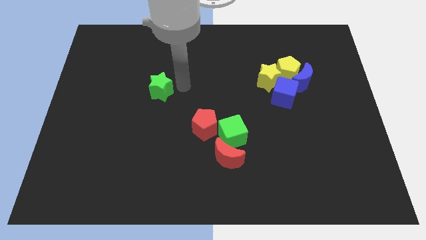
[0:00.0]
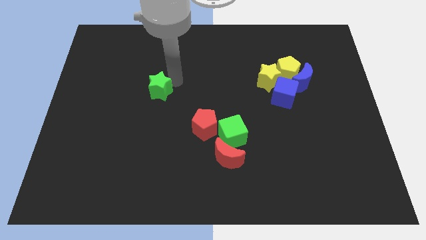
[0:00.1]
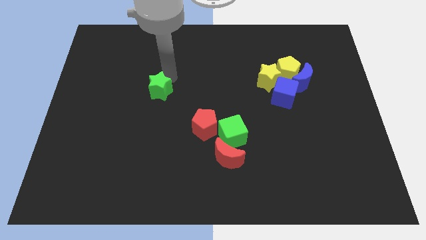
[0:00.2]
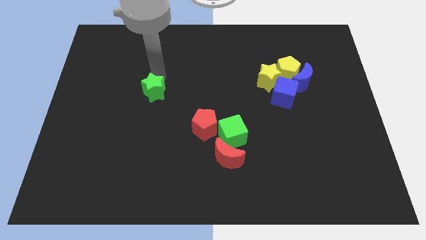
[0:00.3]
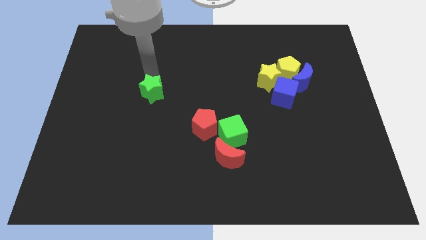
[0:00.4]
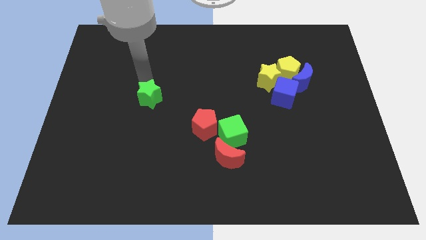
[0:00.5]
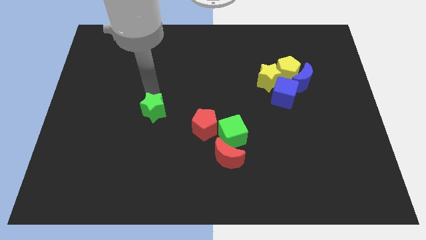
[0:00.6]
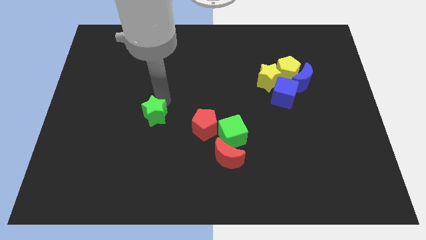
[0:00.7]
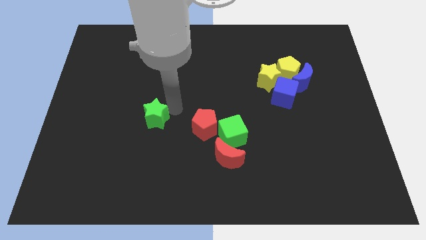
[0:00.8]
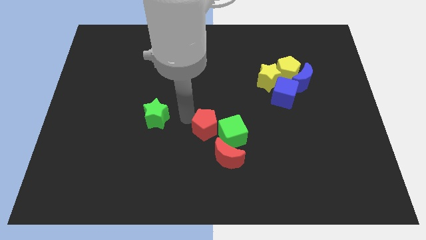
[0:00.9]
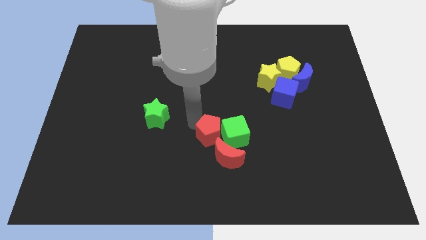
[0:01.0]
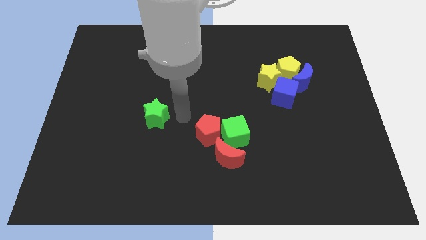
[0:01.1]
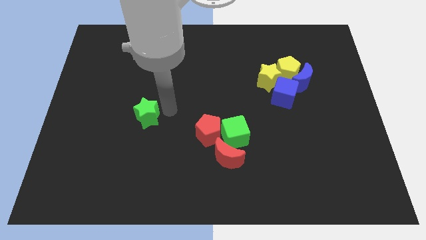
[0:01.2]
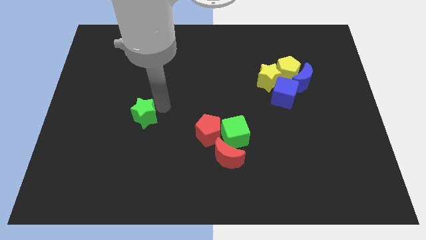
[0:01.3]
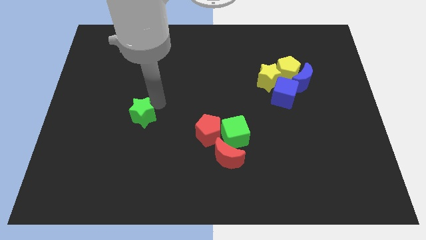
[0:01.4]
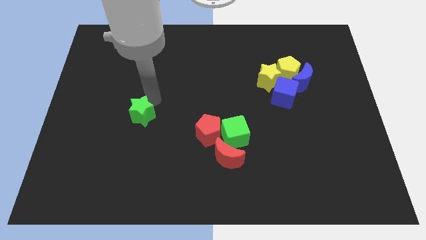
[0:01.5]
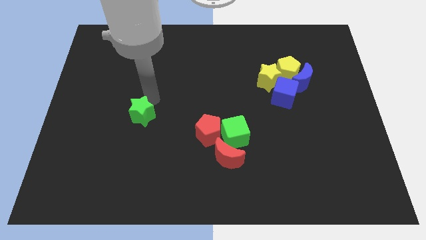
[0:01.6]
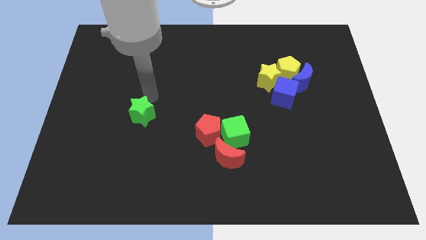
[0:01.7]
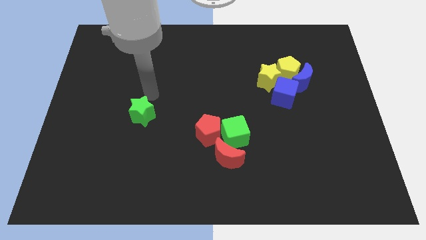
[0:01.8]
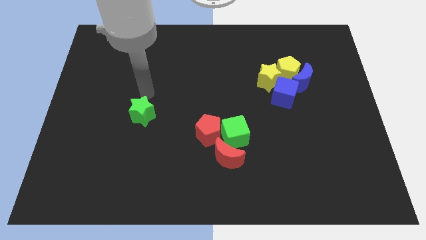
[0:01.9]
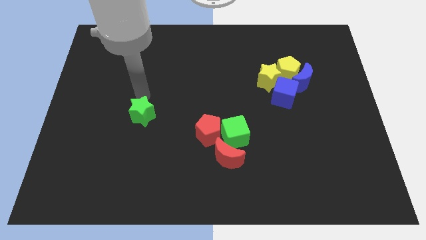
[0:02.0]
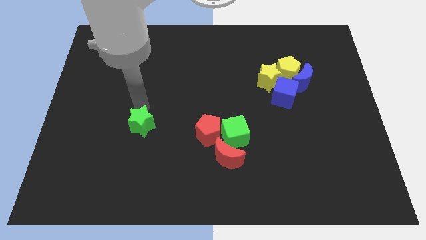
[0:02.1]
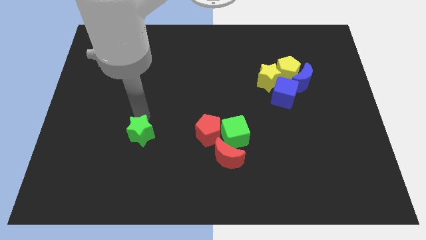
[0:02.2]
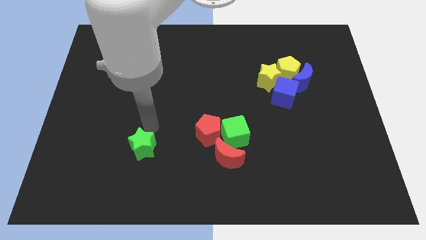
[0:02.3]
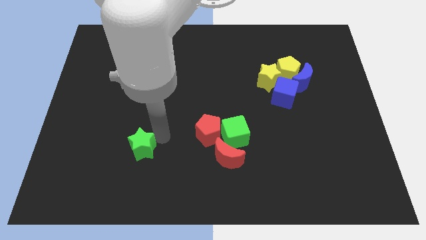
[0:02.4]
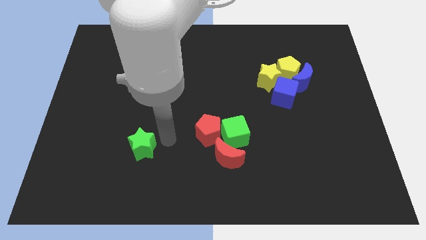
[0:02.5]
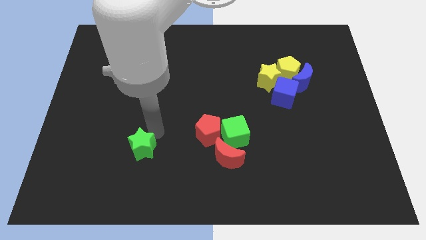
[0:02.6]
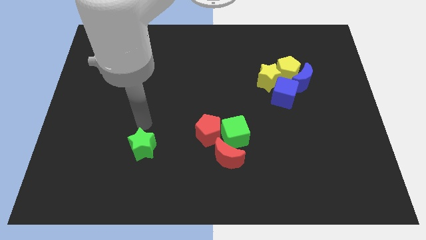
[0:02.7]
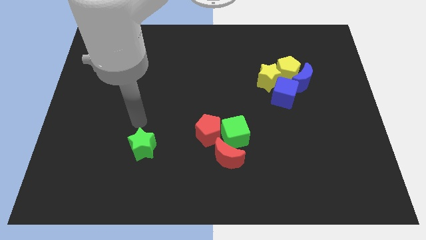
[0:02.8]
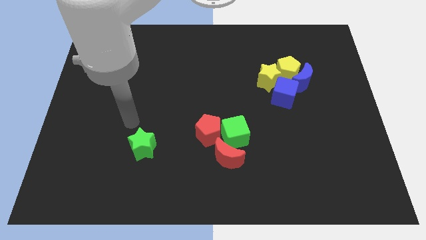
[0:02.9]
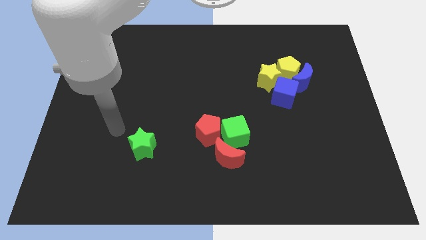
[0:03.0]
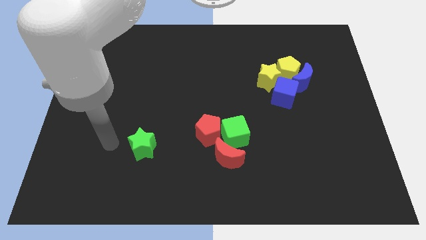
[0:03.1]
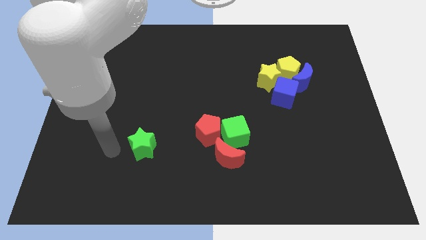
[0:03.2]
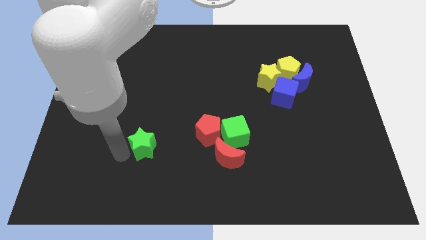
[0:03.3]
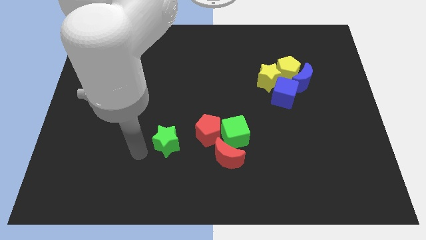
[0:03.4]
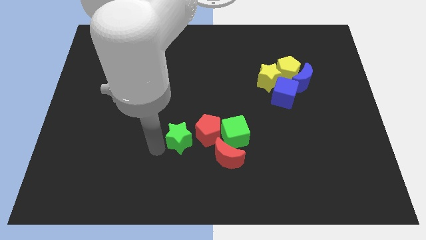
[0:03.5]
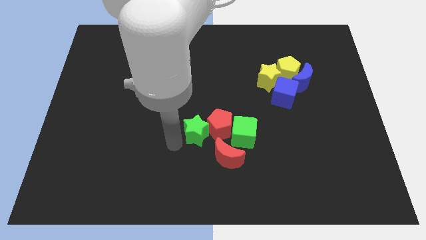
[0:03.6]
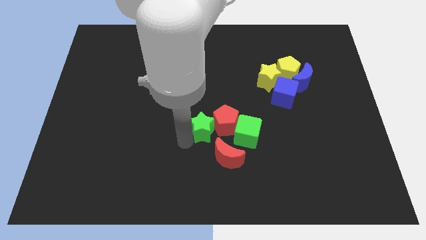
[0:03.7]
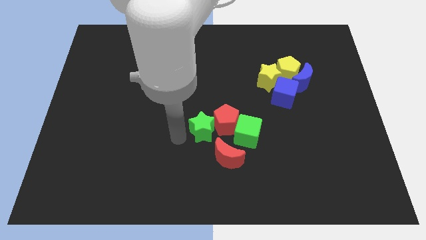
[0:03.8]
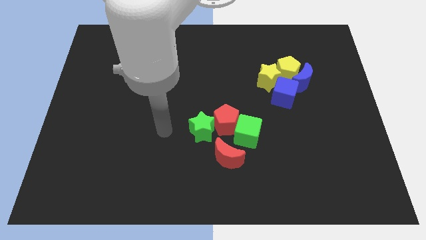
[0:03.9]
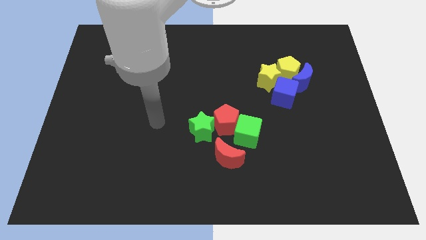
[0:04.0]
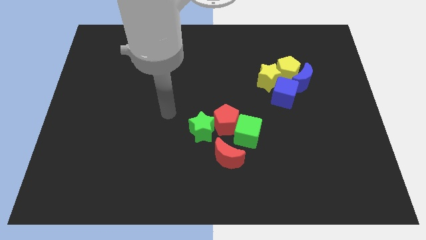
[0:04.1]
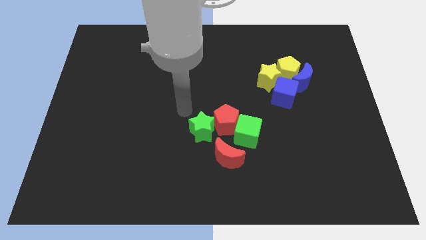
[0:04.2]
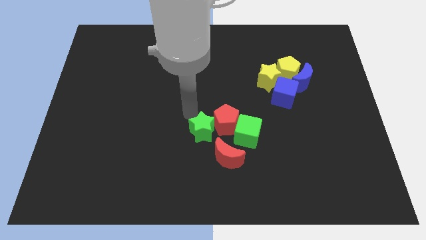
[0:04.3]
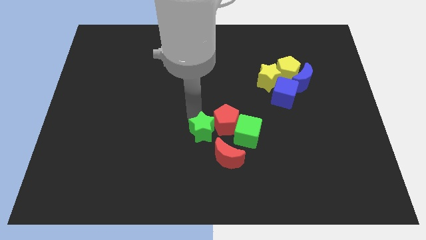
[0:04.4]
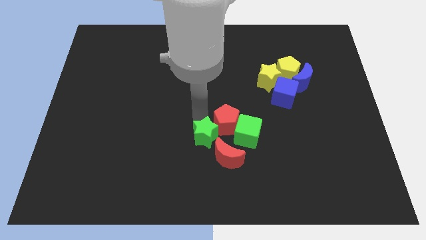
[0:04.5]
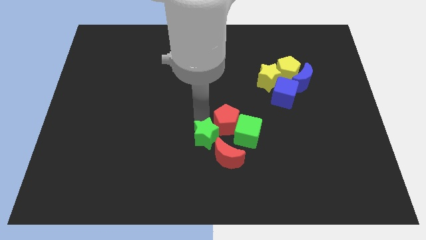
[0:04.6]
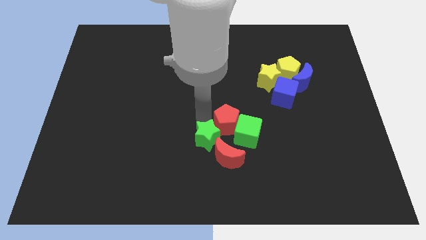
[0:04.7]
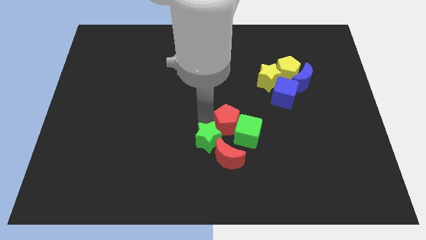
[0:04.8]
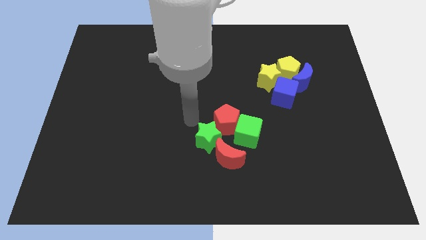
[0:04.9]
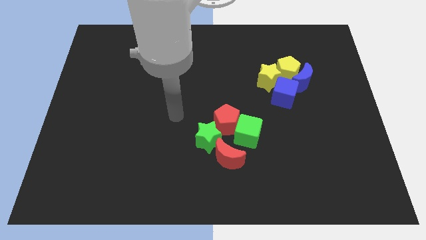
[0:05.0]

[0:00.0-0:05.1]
move the green star to the bottom left side of the red pentagon

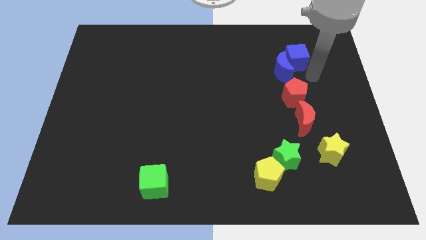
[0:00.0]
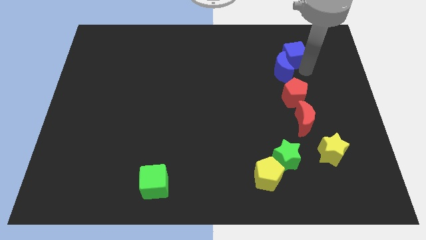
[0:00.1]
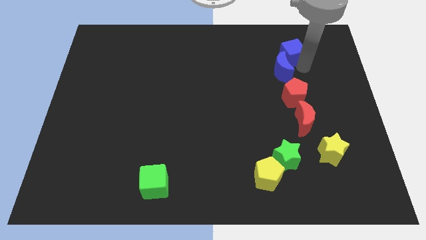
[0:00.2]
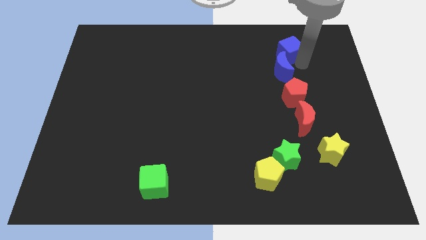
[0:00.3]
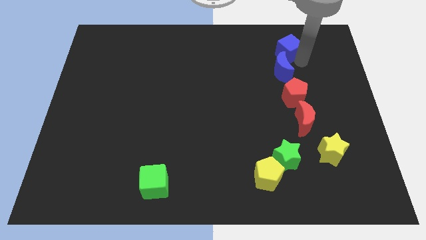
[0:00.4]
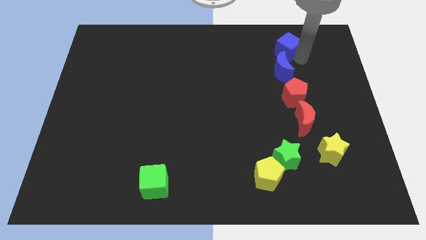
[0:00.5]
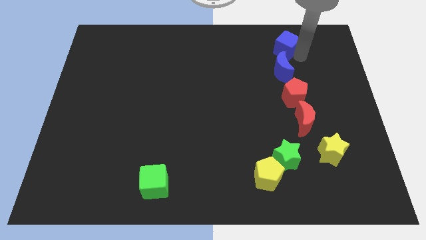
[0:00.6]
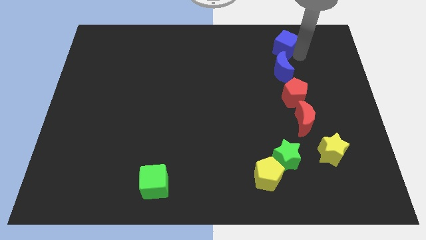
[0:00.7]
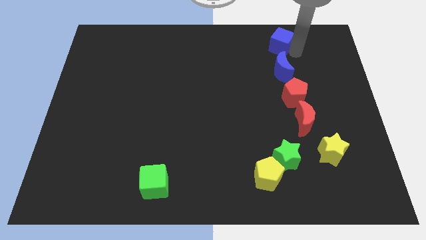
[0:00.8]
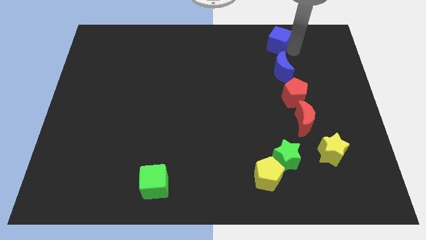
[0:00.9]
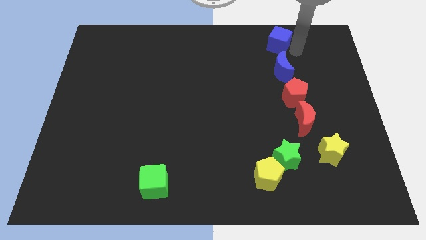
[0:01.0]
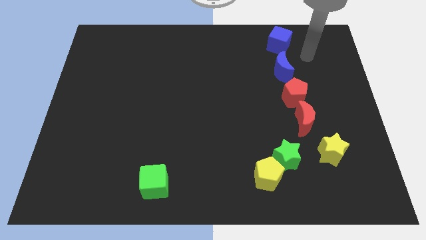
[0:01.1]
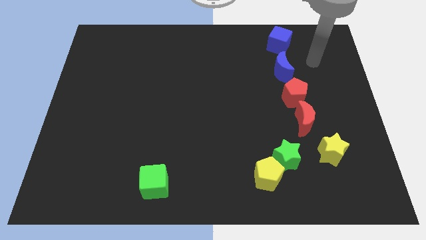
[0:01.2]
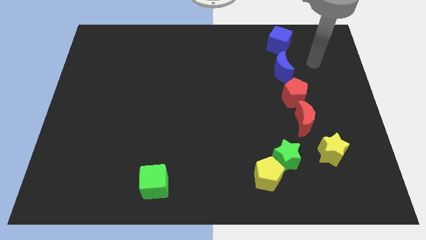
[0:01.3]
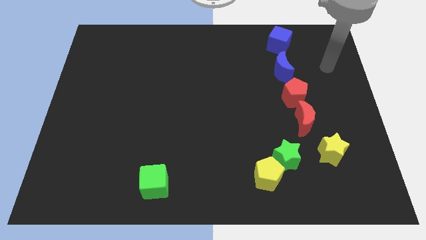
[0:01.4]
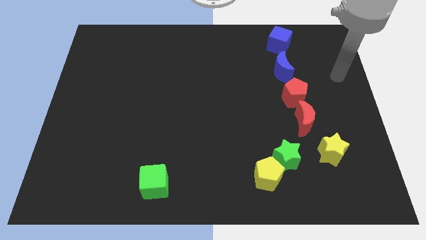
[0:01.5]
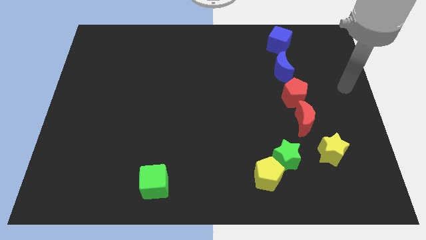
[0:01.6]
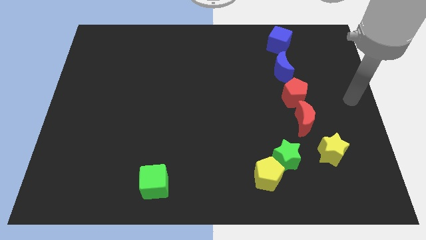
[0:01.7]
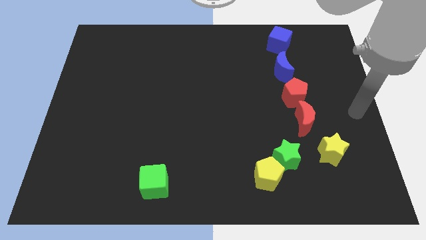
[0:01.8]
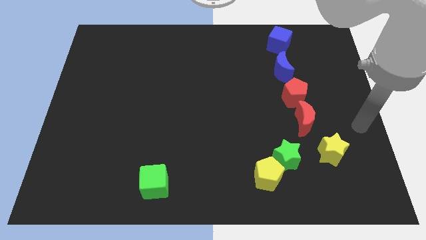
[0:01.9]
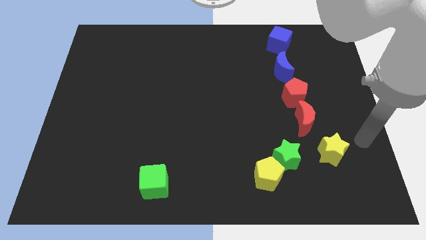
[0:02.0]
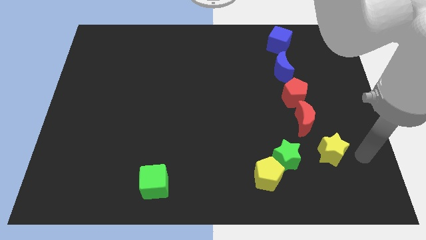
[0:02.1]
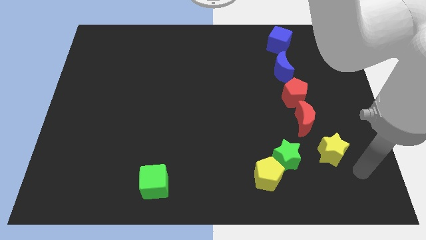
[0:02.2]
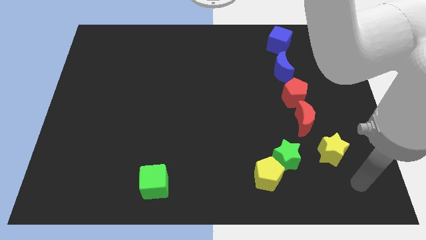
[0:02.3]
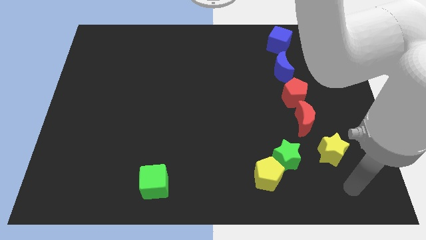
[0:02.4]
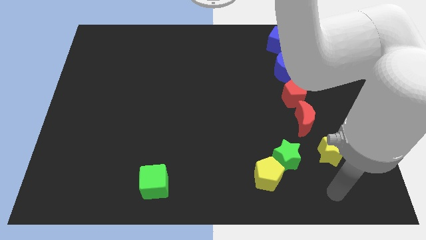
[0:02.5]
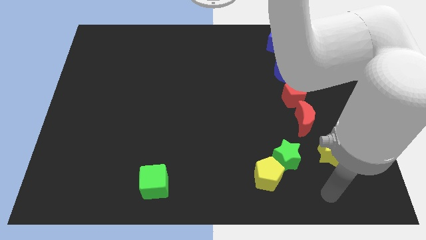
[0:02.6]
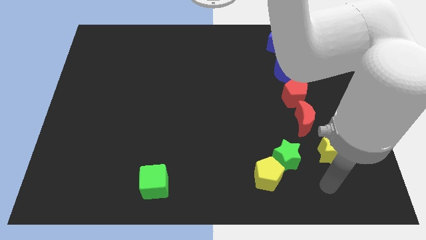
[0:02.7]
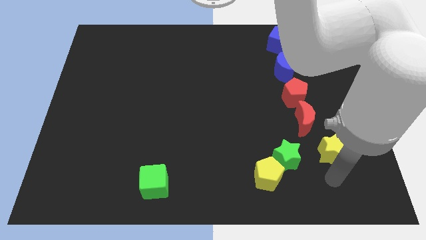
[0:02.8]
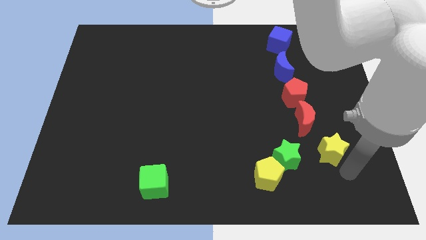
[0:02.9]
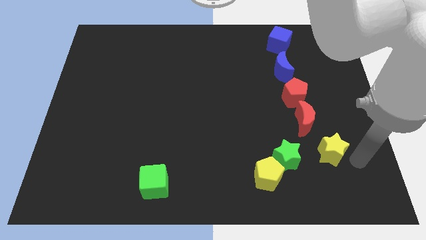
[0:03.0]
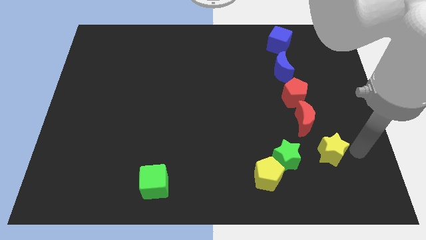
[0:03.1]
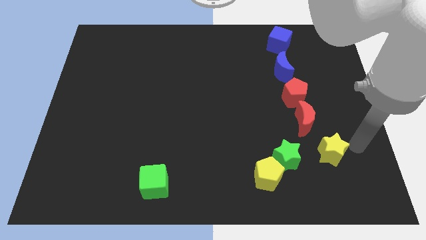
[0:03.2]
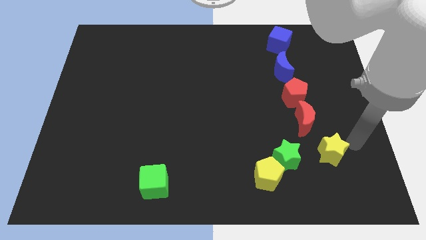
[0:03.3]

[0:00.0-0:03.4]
slide the blue cube to the top of the blue moon

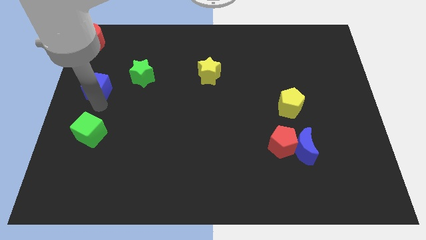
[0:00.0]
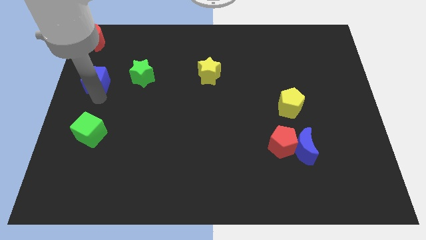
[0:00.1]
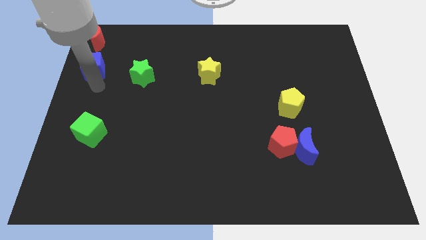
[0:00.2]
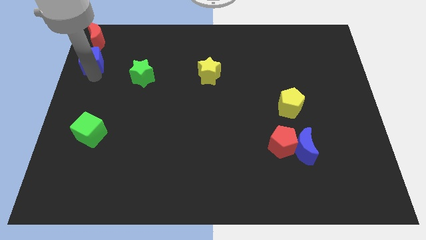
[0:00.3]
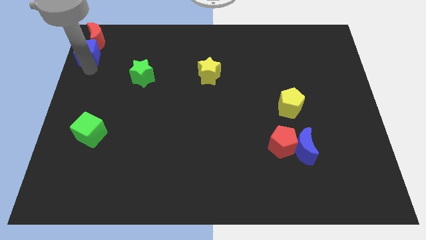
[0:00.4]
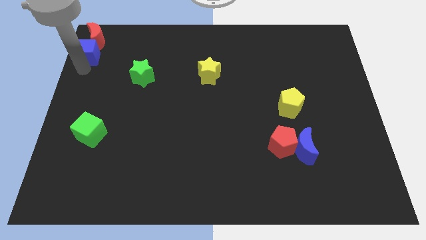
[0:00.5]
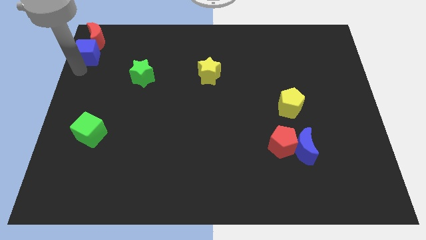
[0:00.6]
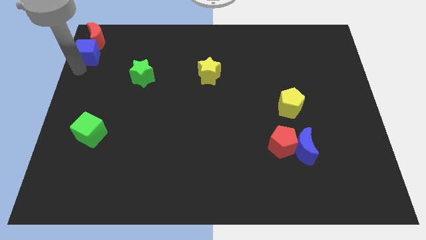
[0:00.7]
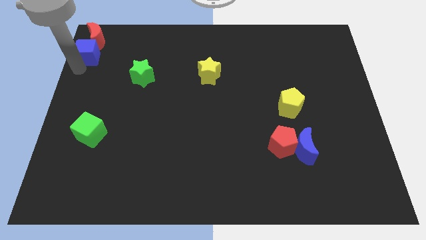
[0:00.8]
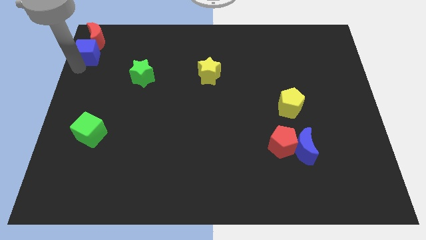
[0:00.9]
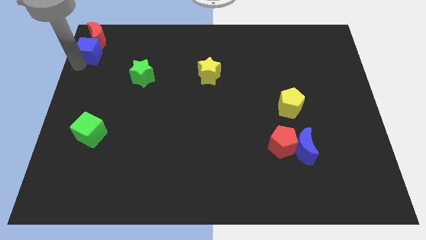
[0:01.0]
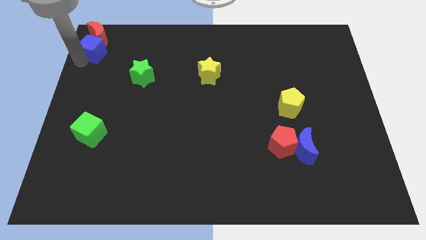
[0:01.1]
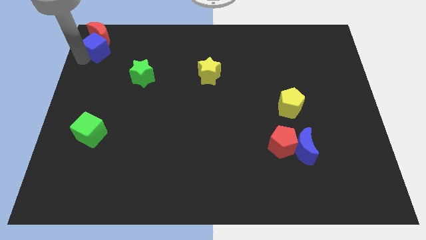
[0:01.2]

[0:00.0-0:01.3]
push the blue cube into red crescent
